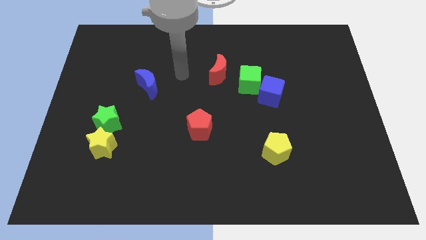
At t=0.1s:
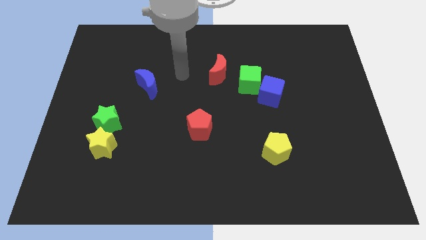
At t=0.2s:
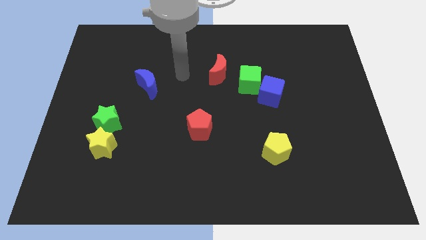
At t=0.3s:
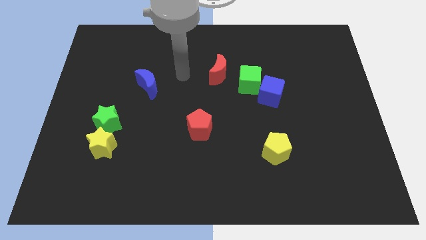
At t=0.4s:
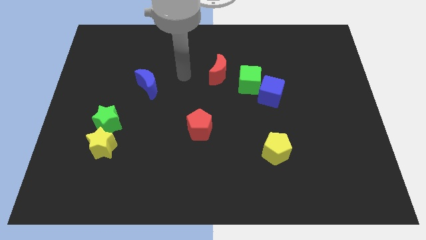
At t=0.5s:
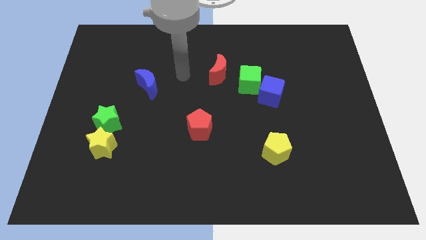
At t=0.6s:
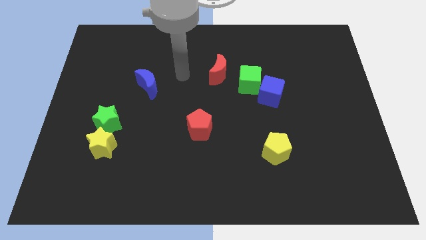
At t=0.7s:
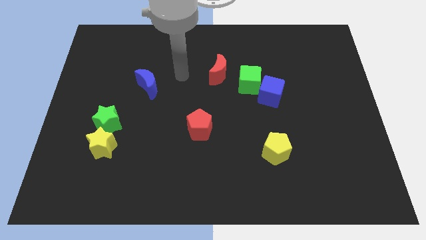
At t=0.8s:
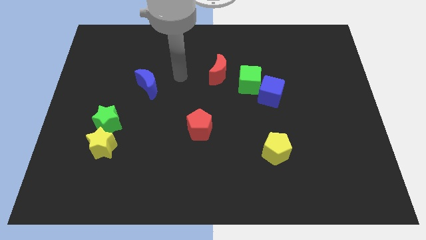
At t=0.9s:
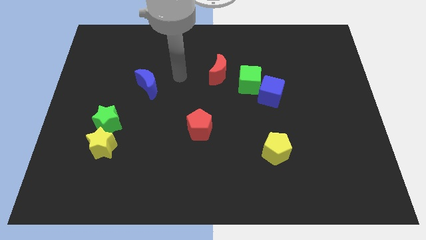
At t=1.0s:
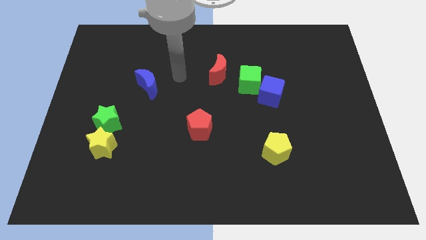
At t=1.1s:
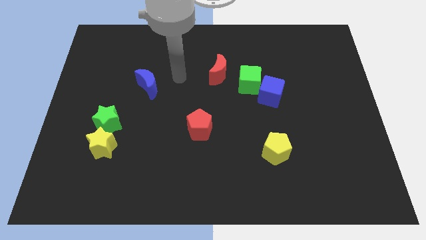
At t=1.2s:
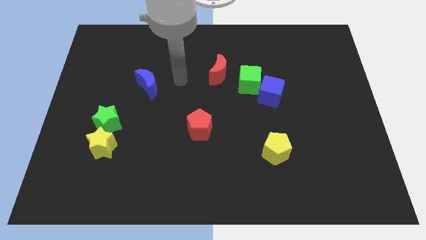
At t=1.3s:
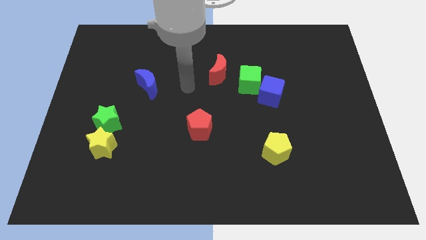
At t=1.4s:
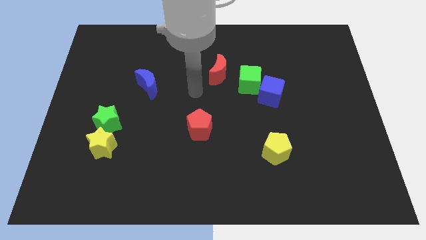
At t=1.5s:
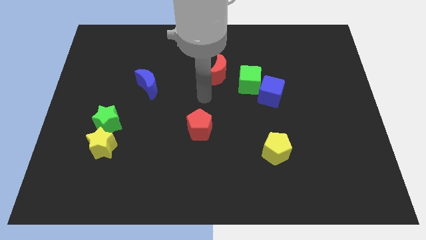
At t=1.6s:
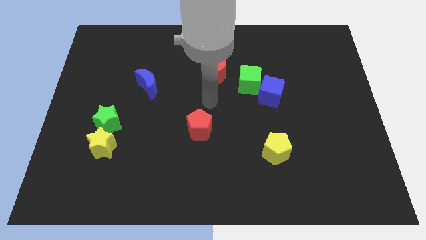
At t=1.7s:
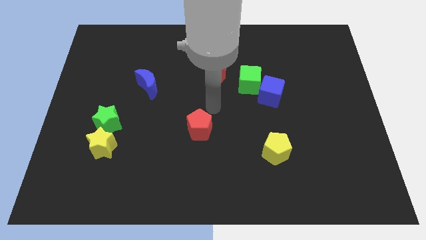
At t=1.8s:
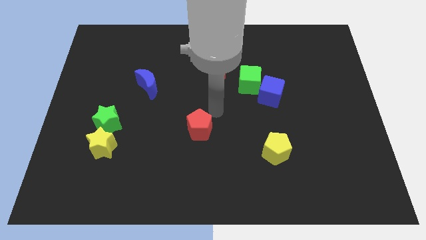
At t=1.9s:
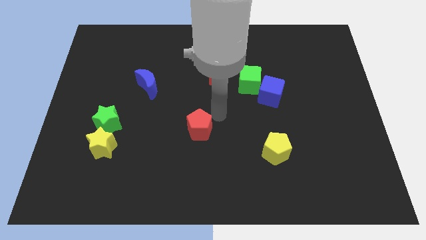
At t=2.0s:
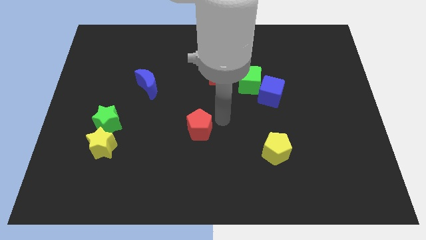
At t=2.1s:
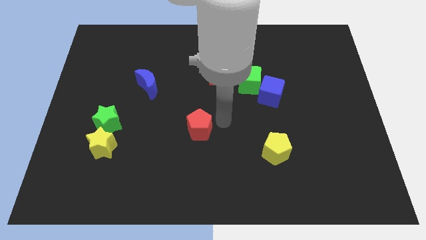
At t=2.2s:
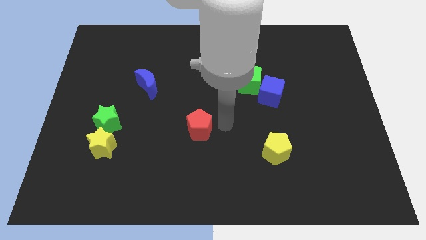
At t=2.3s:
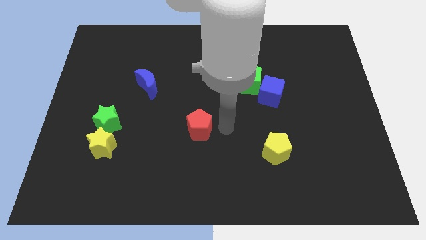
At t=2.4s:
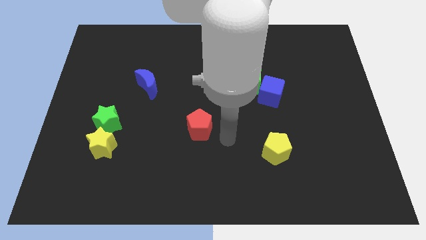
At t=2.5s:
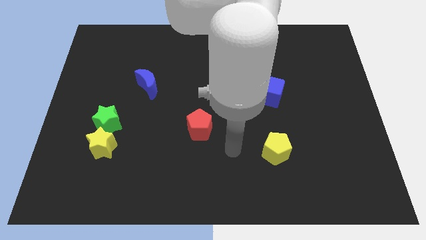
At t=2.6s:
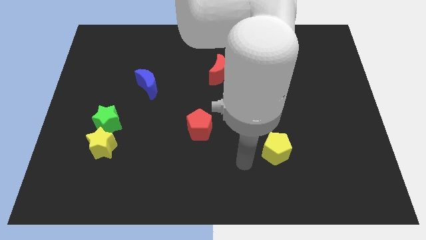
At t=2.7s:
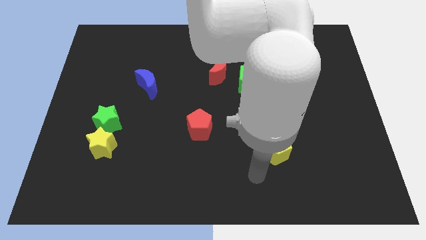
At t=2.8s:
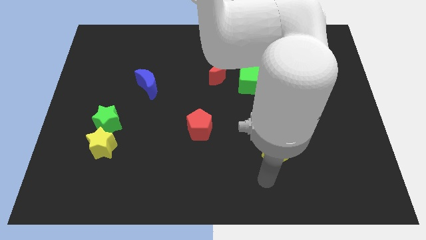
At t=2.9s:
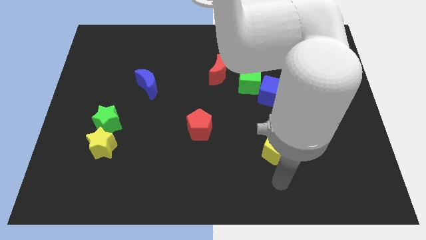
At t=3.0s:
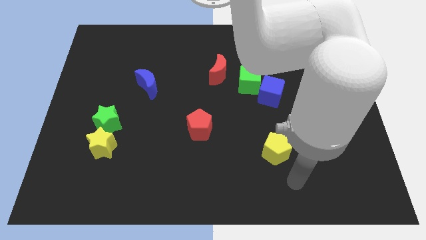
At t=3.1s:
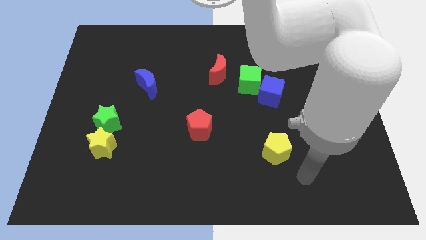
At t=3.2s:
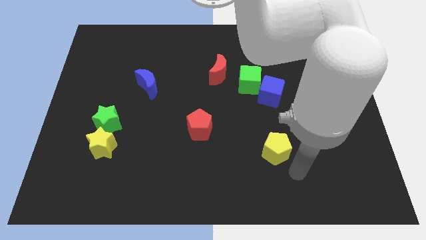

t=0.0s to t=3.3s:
go and point your hand at the bottom right of the yellow pentagon

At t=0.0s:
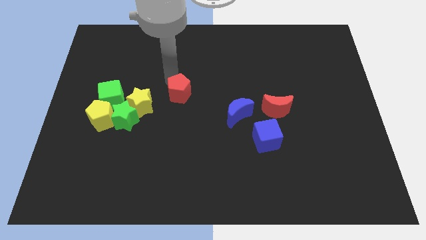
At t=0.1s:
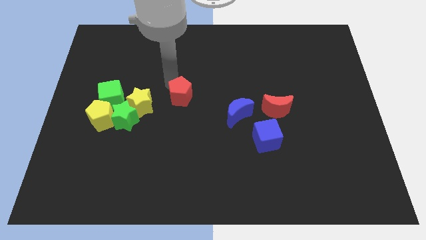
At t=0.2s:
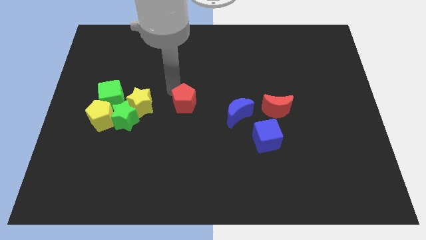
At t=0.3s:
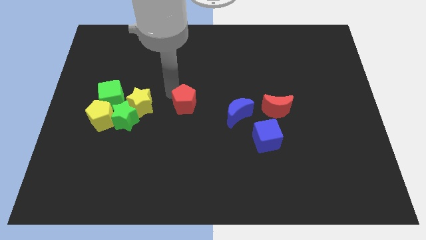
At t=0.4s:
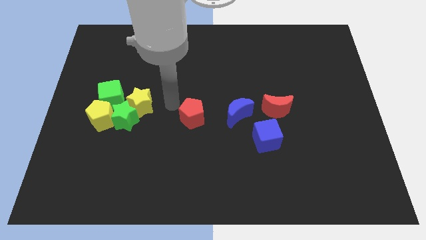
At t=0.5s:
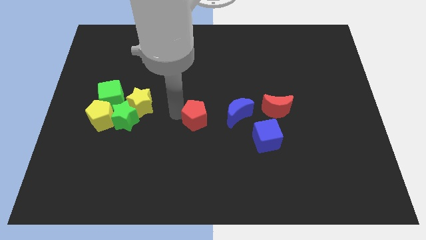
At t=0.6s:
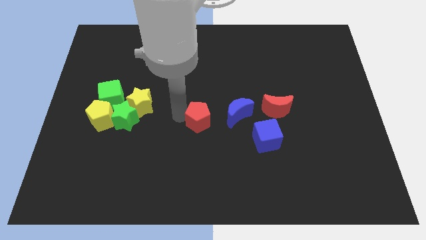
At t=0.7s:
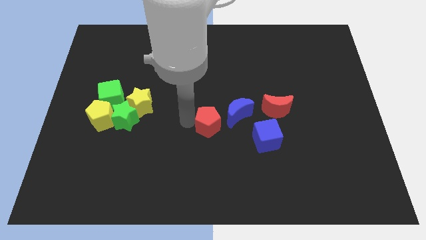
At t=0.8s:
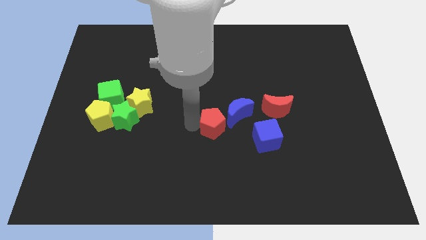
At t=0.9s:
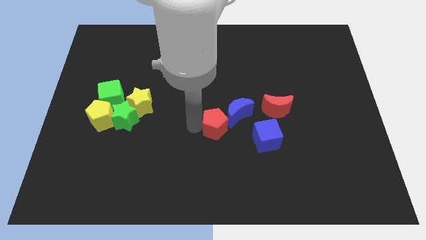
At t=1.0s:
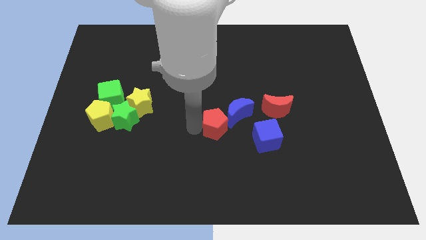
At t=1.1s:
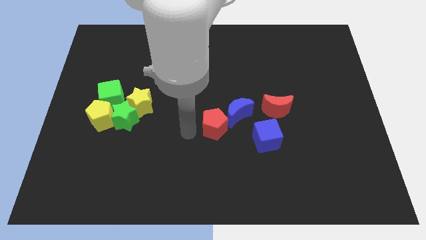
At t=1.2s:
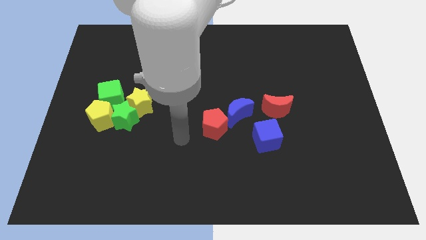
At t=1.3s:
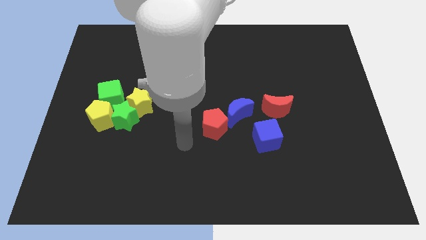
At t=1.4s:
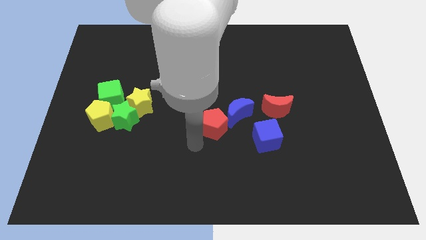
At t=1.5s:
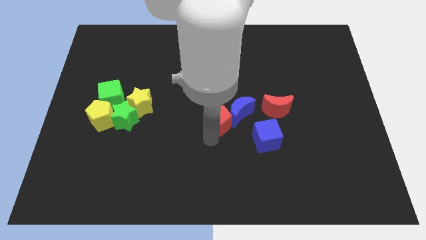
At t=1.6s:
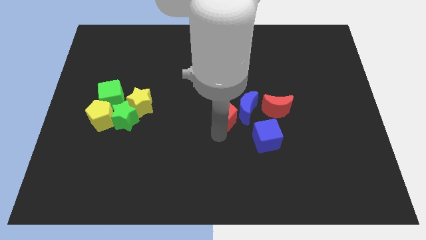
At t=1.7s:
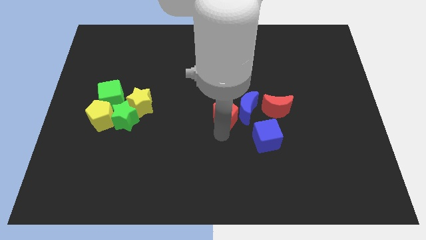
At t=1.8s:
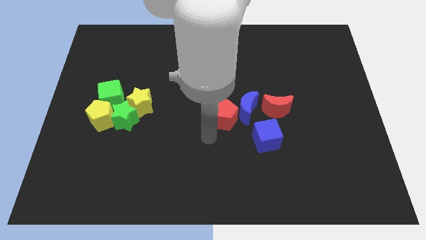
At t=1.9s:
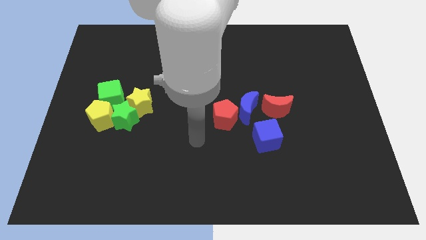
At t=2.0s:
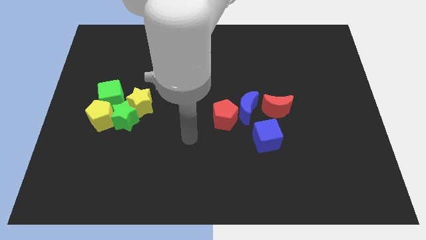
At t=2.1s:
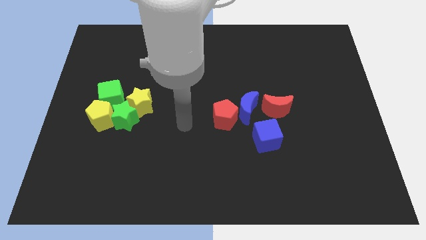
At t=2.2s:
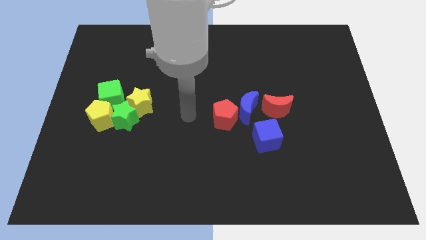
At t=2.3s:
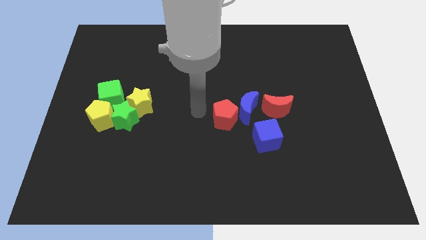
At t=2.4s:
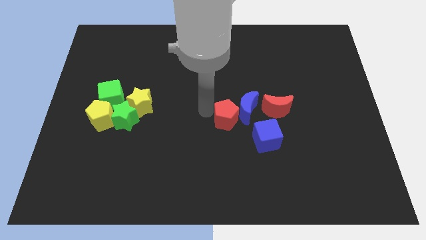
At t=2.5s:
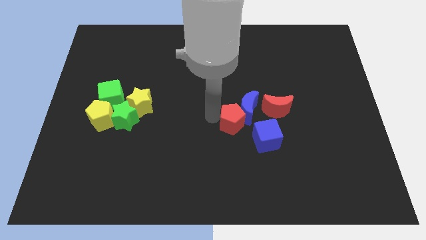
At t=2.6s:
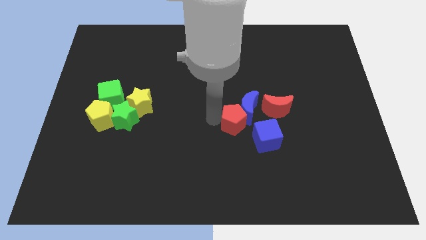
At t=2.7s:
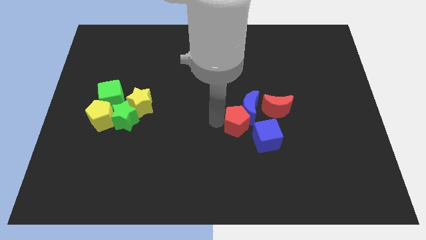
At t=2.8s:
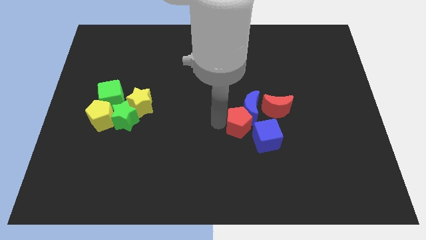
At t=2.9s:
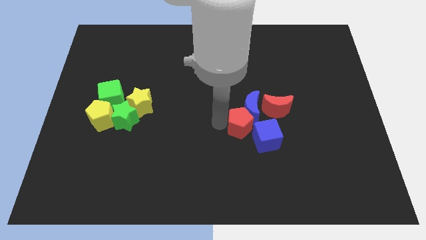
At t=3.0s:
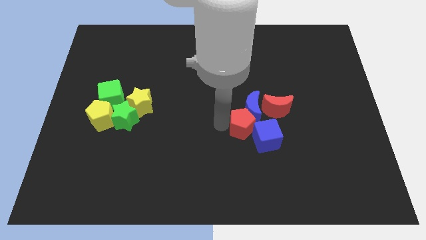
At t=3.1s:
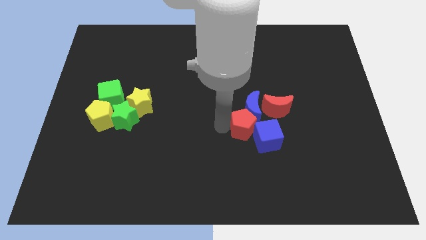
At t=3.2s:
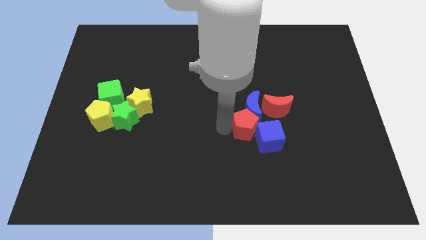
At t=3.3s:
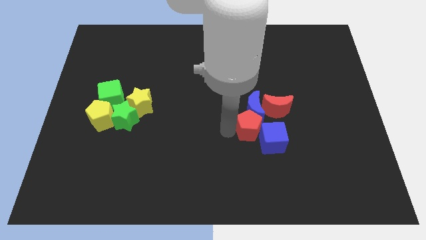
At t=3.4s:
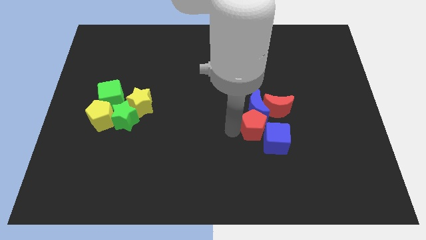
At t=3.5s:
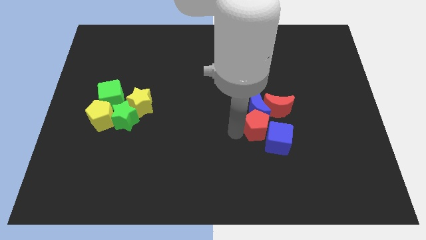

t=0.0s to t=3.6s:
move the red pentagon into the blue cube

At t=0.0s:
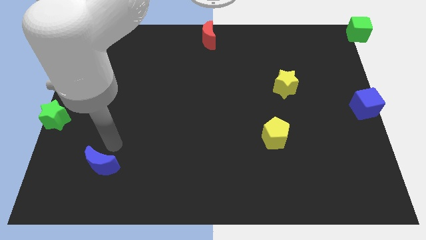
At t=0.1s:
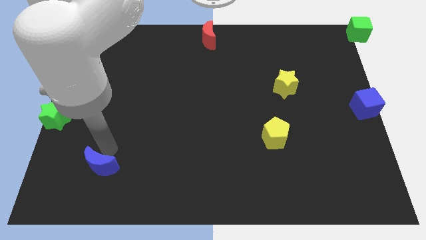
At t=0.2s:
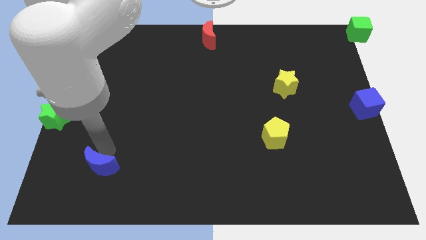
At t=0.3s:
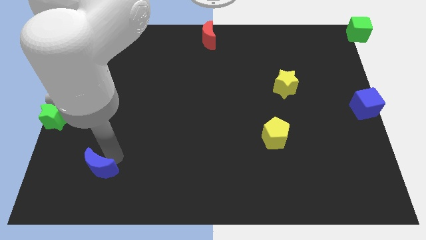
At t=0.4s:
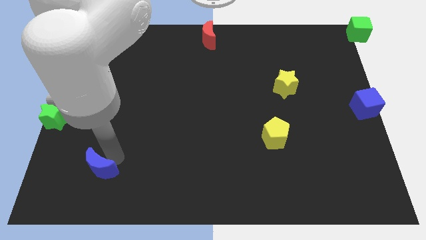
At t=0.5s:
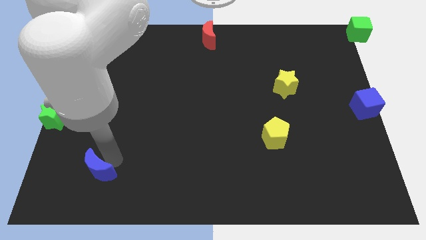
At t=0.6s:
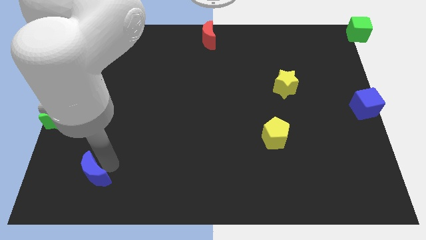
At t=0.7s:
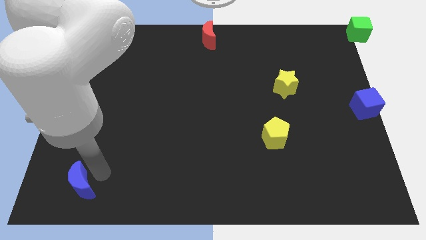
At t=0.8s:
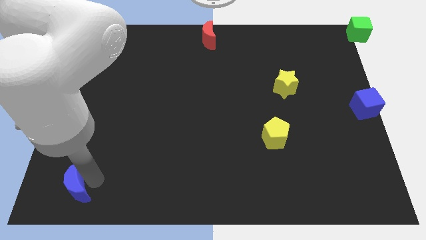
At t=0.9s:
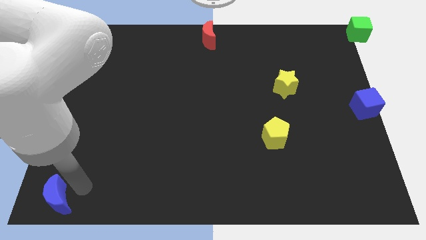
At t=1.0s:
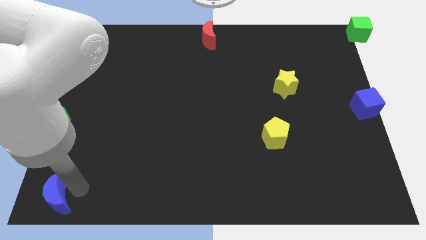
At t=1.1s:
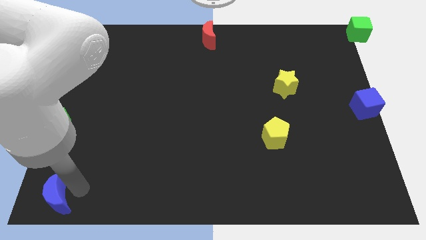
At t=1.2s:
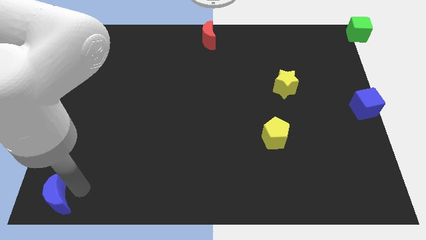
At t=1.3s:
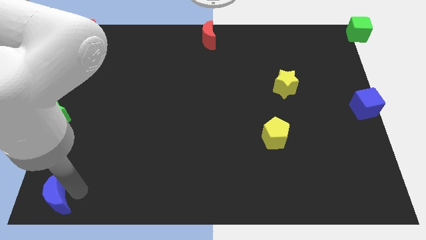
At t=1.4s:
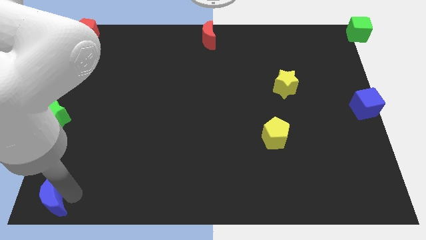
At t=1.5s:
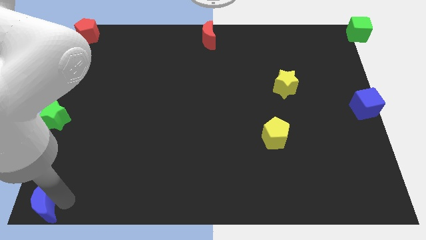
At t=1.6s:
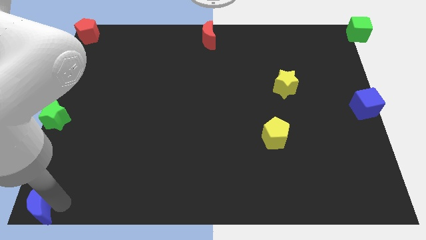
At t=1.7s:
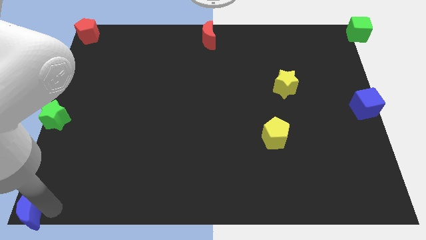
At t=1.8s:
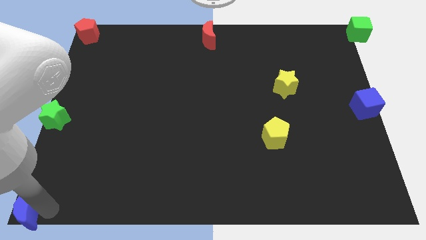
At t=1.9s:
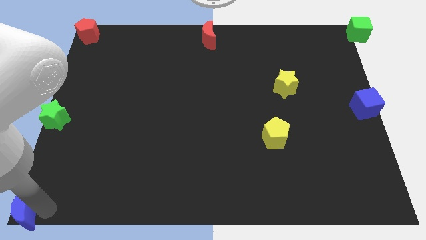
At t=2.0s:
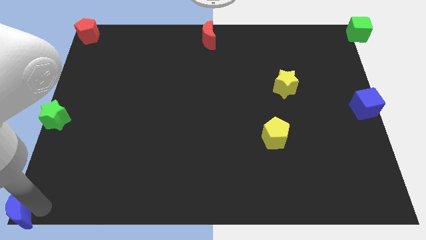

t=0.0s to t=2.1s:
put the blue crescent at the bottom left corner
